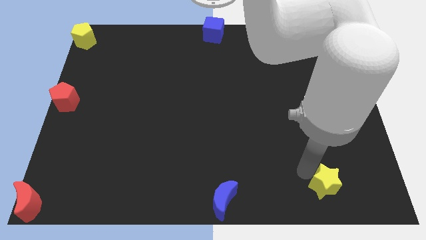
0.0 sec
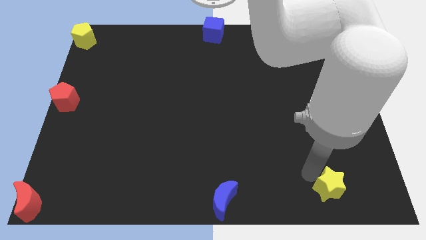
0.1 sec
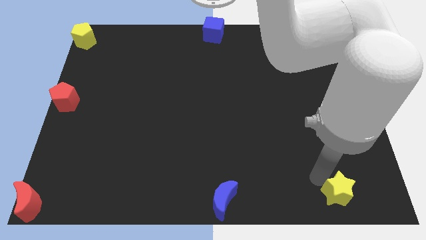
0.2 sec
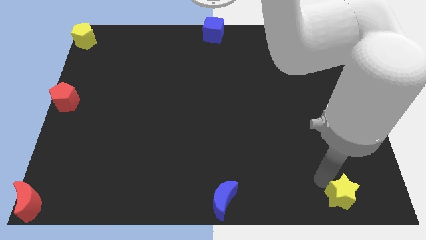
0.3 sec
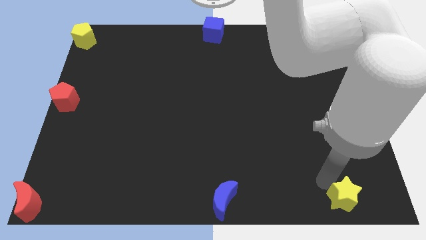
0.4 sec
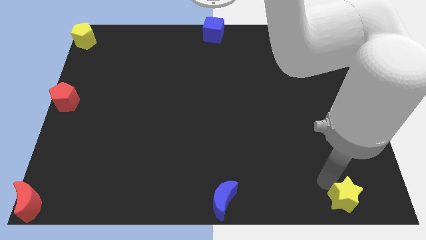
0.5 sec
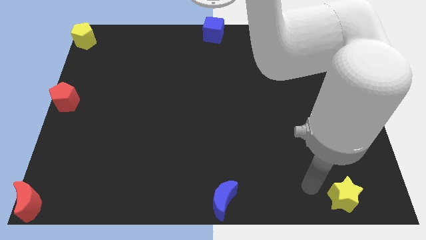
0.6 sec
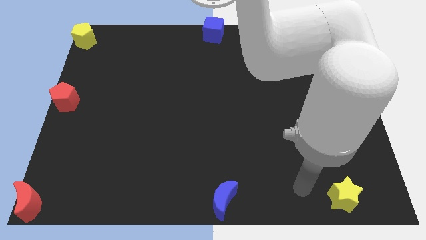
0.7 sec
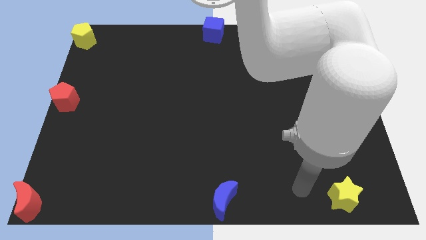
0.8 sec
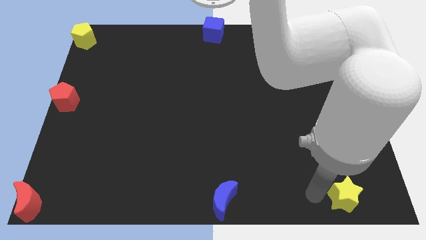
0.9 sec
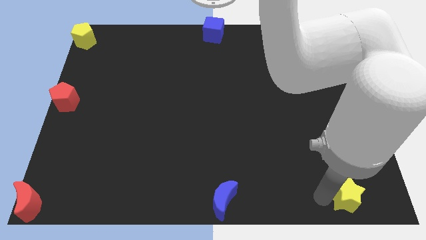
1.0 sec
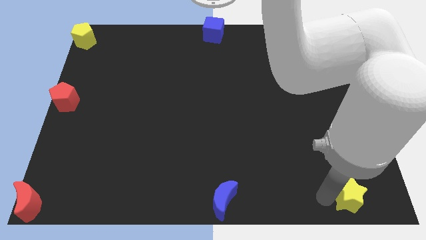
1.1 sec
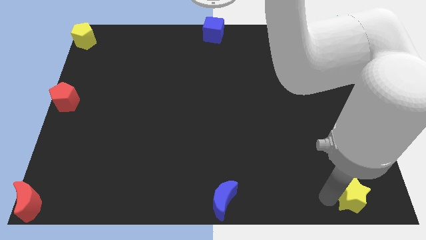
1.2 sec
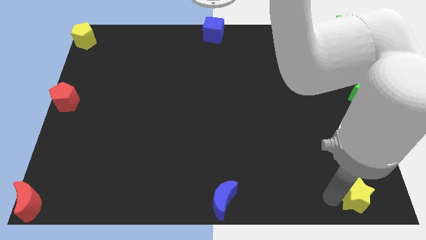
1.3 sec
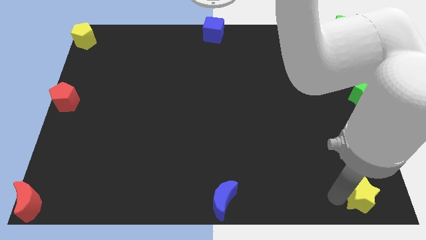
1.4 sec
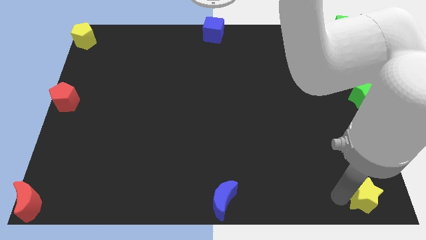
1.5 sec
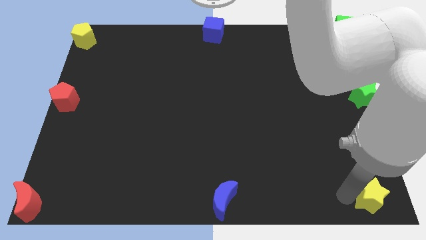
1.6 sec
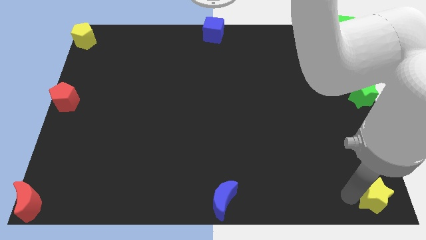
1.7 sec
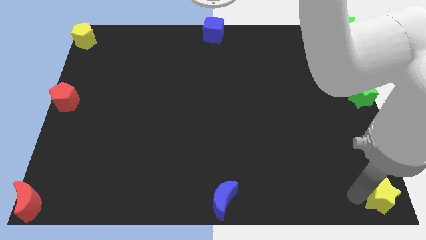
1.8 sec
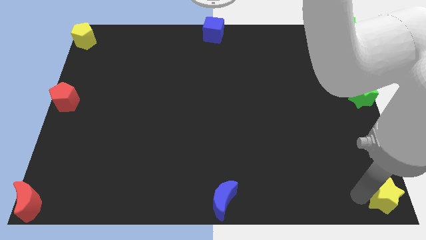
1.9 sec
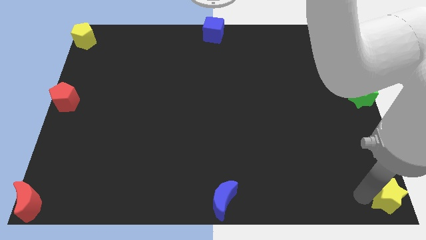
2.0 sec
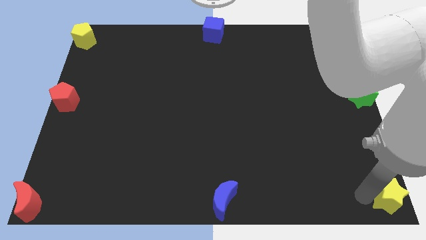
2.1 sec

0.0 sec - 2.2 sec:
push yellow start to right side

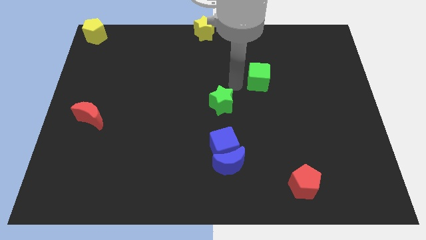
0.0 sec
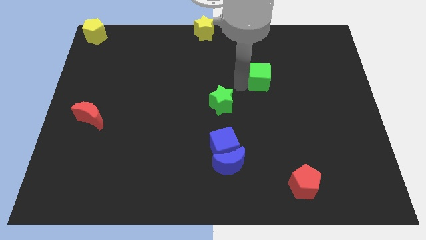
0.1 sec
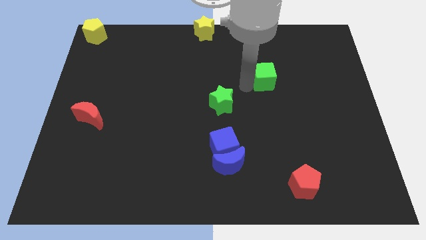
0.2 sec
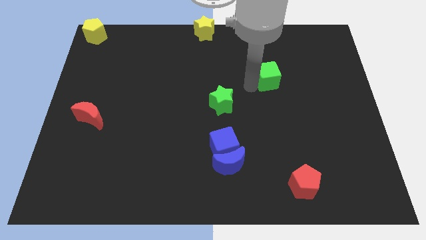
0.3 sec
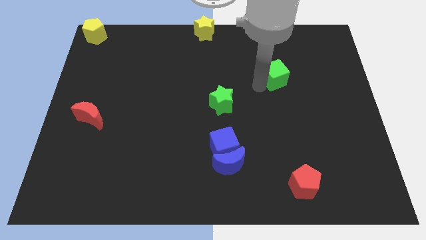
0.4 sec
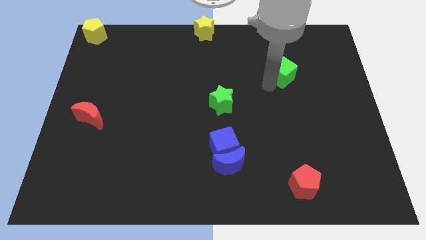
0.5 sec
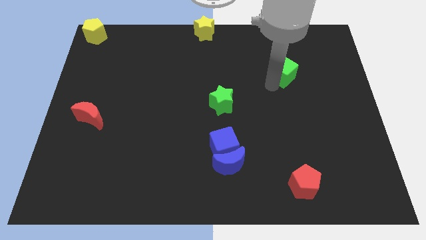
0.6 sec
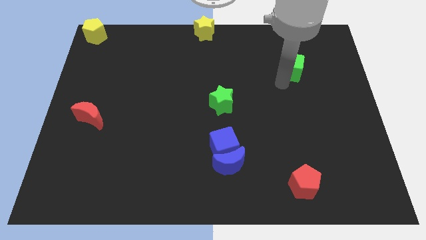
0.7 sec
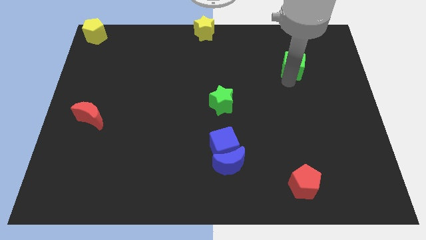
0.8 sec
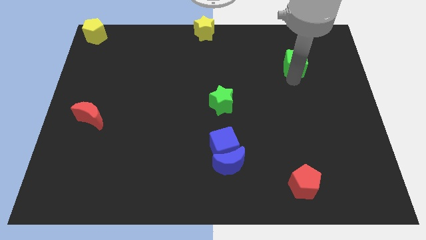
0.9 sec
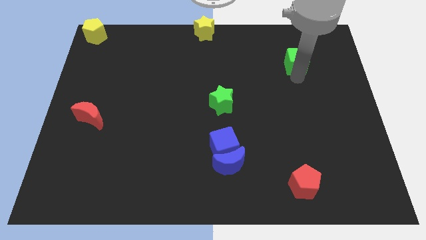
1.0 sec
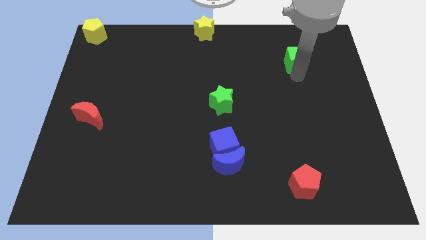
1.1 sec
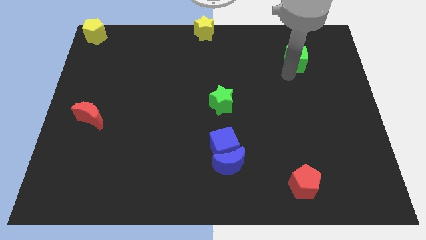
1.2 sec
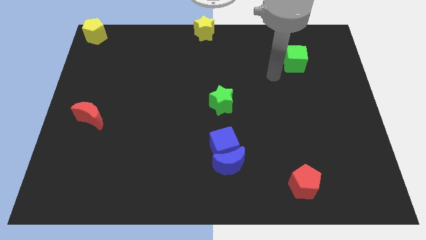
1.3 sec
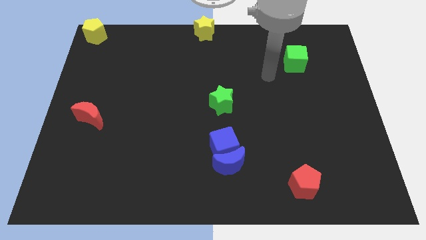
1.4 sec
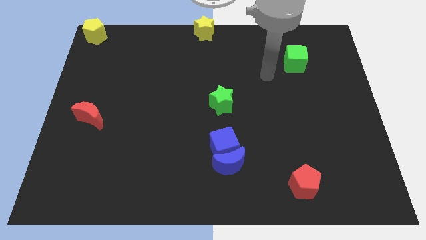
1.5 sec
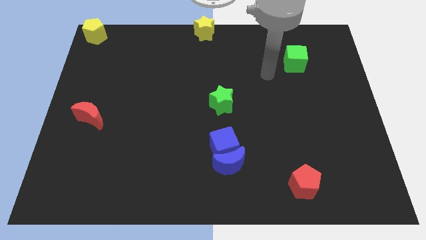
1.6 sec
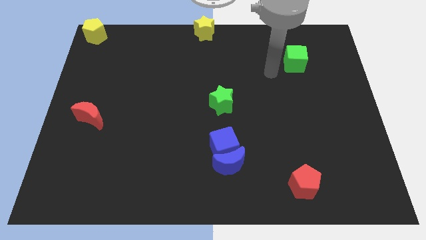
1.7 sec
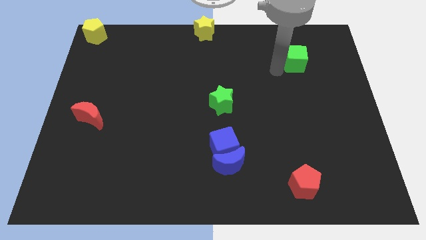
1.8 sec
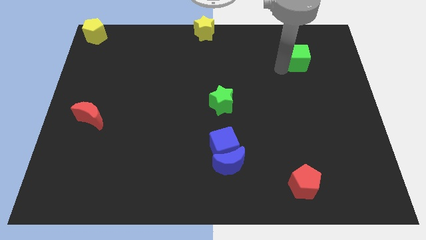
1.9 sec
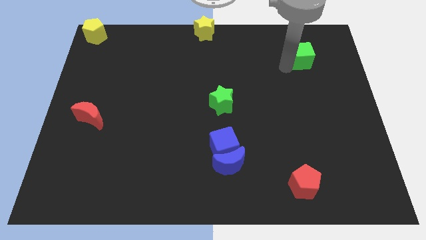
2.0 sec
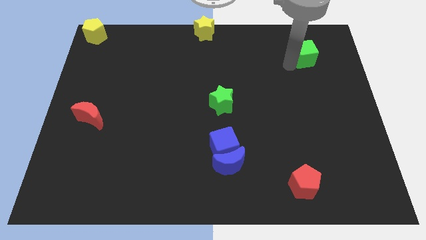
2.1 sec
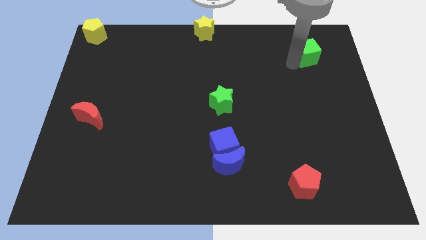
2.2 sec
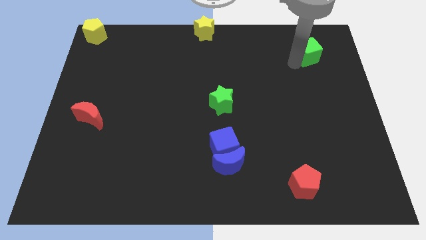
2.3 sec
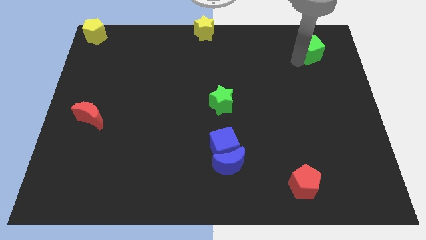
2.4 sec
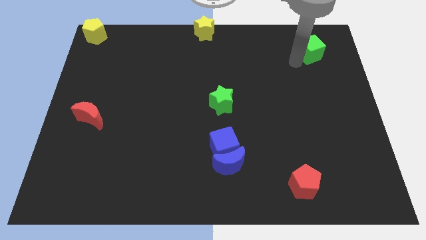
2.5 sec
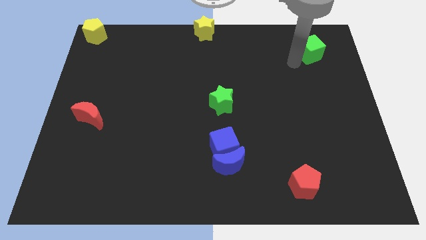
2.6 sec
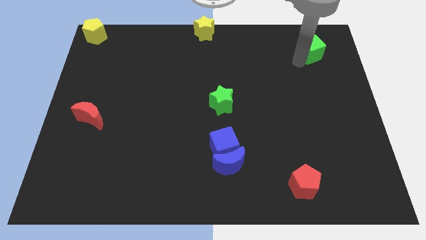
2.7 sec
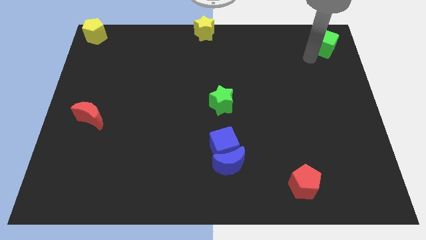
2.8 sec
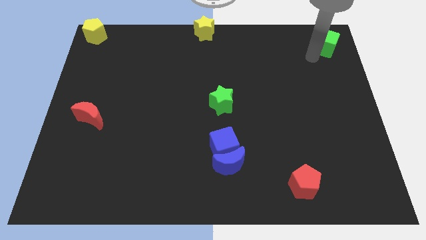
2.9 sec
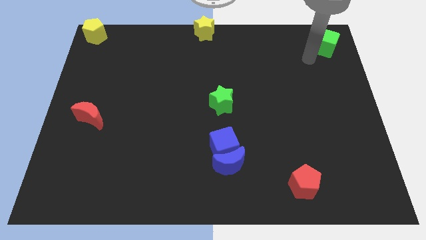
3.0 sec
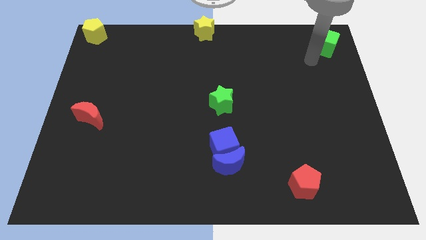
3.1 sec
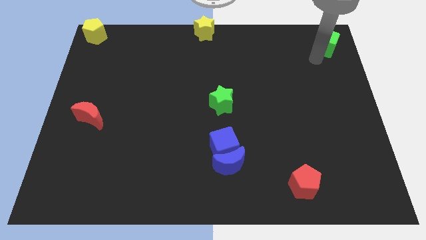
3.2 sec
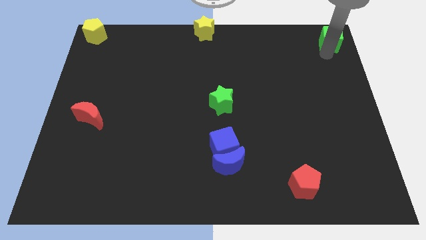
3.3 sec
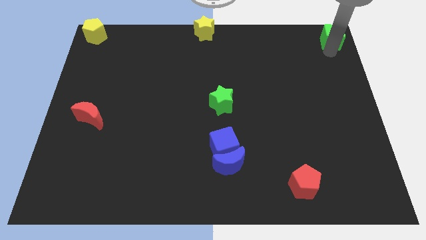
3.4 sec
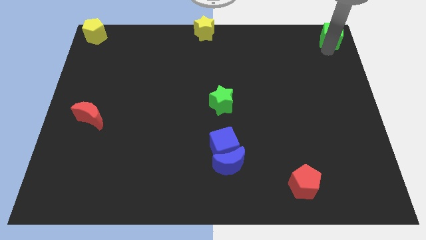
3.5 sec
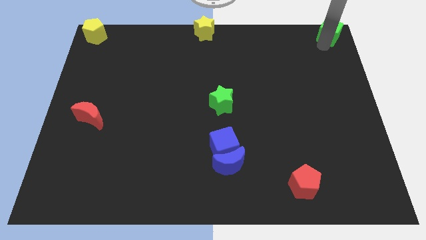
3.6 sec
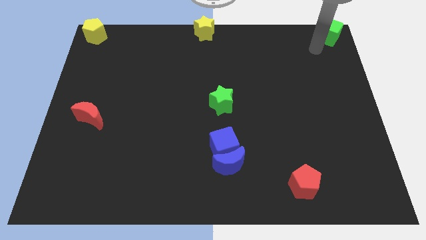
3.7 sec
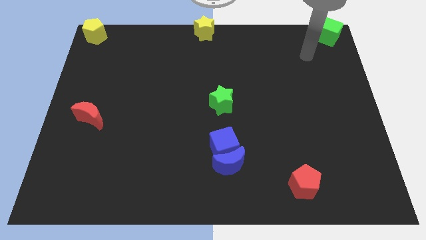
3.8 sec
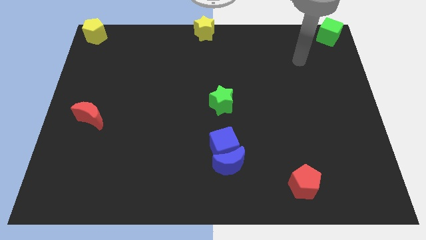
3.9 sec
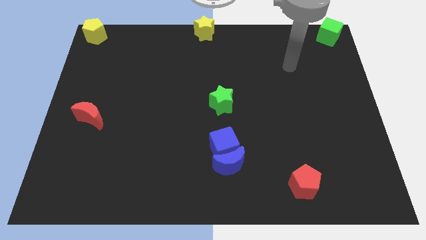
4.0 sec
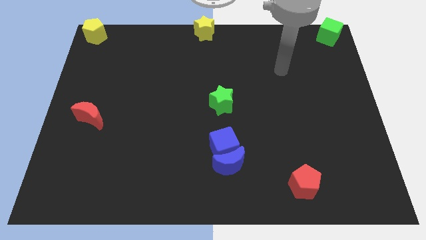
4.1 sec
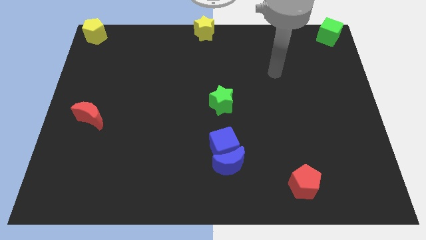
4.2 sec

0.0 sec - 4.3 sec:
move the green cube to the top right corner of the board

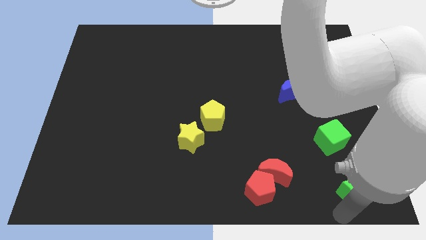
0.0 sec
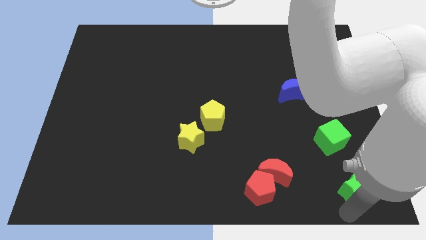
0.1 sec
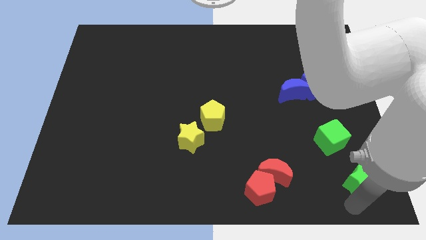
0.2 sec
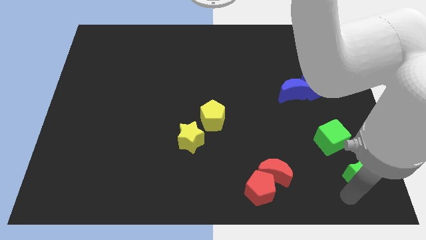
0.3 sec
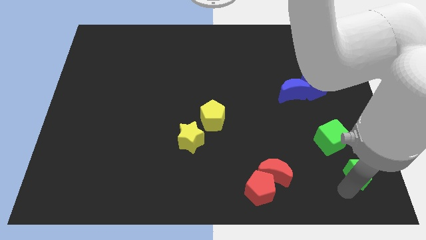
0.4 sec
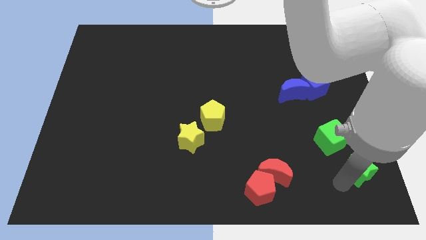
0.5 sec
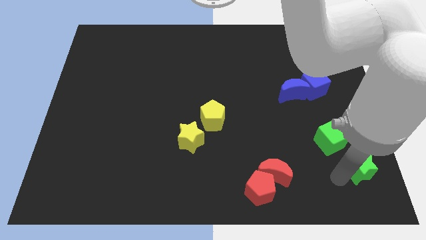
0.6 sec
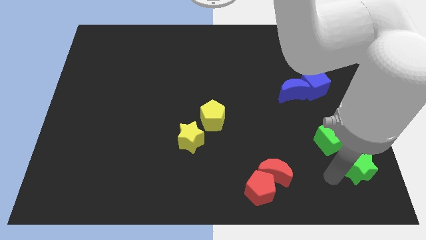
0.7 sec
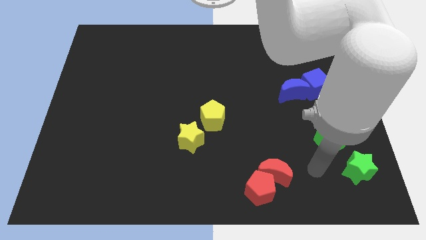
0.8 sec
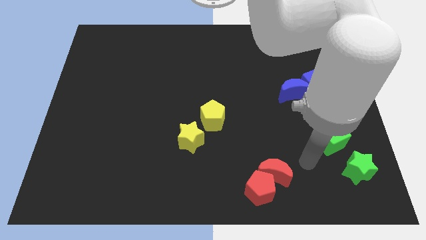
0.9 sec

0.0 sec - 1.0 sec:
place the green star below the green cube

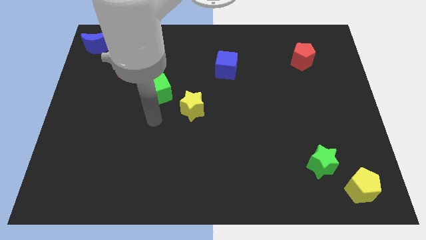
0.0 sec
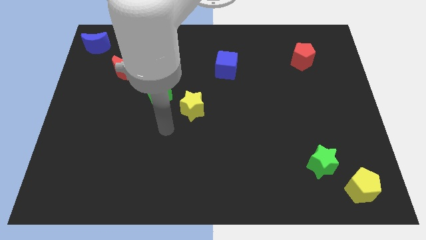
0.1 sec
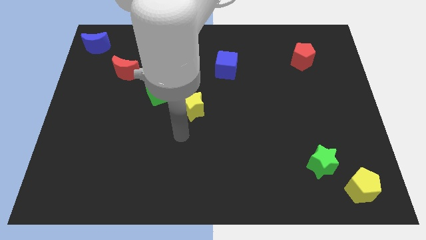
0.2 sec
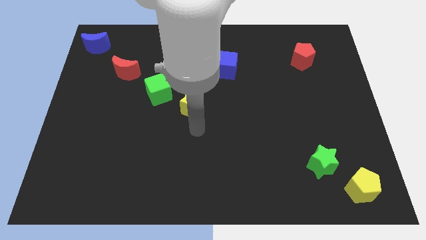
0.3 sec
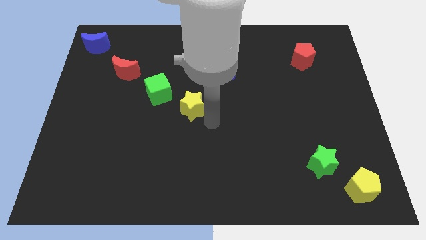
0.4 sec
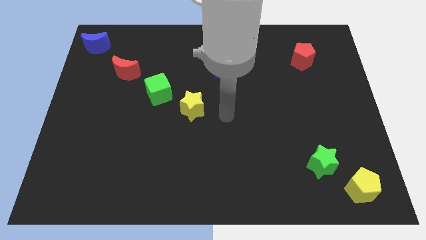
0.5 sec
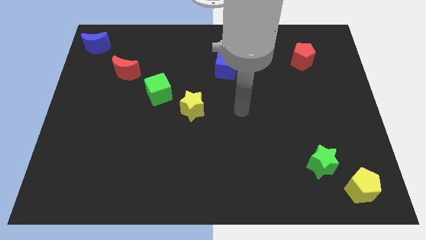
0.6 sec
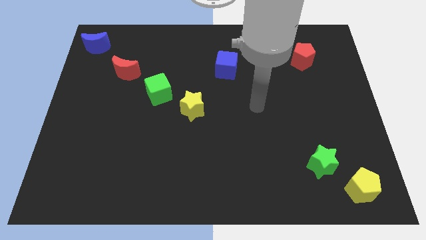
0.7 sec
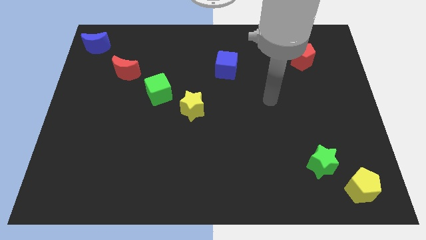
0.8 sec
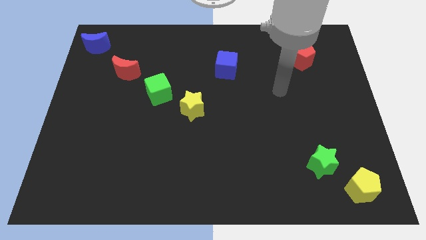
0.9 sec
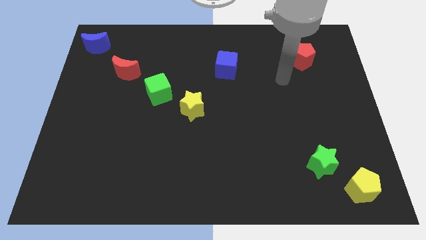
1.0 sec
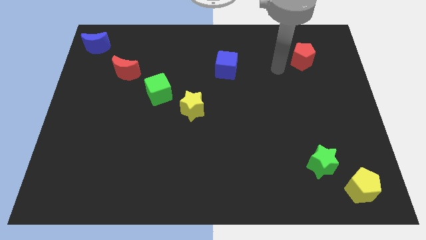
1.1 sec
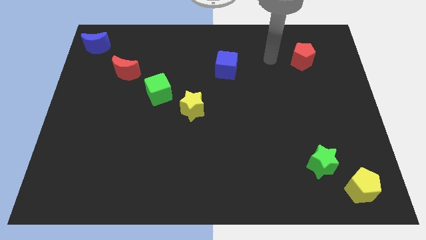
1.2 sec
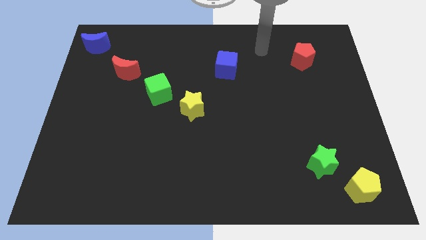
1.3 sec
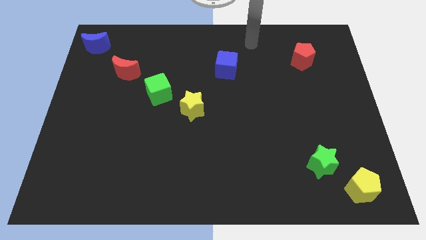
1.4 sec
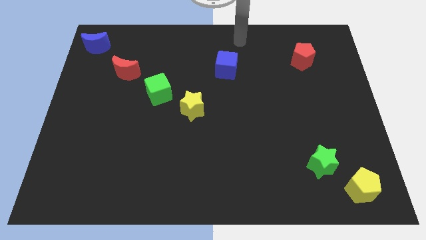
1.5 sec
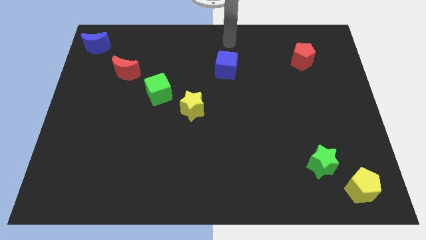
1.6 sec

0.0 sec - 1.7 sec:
move your arm towards the top side of the blue cube
